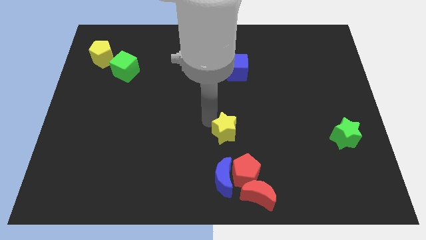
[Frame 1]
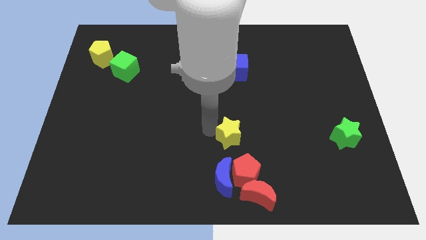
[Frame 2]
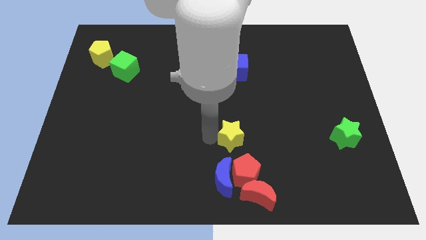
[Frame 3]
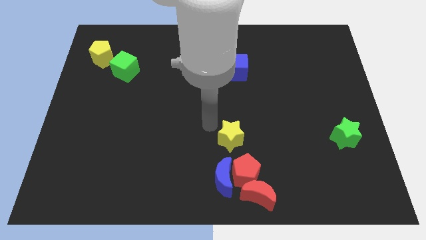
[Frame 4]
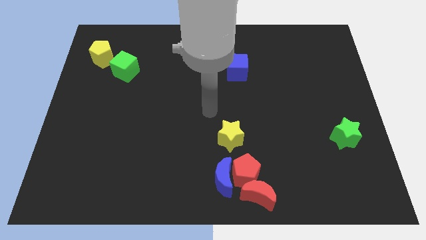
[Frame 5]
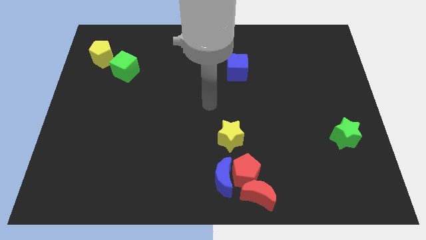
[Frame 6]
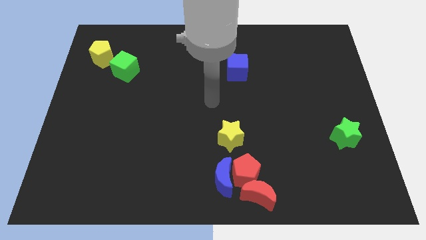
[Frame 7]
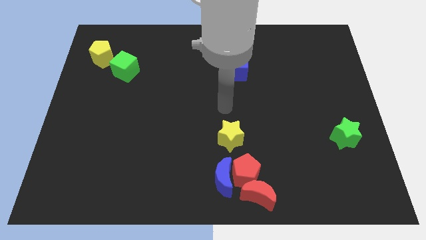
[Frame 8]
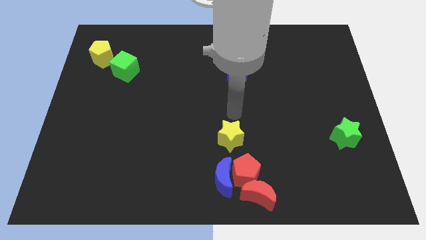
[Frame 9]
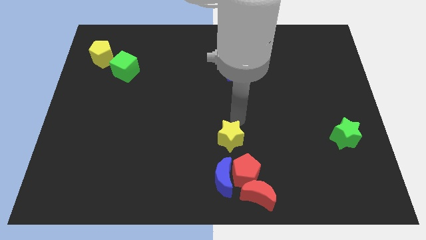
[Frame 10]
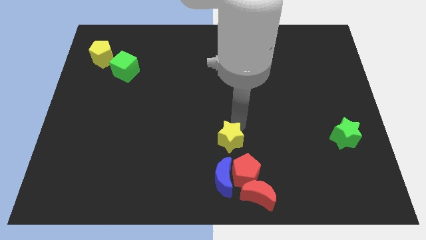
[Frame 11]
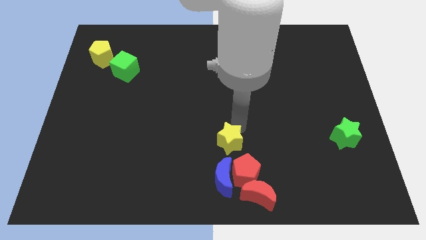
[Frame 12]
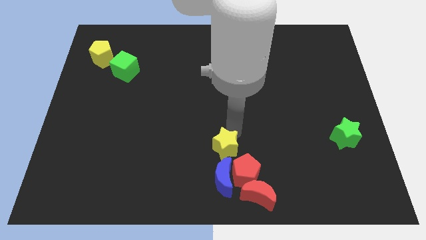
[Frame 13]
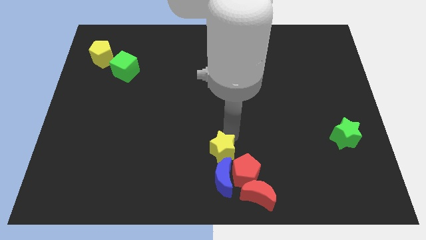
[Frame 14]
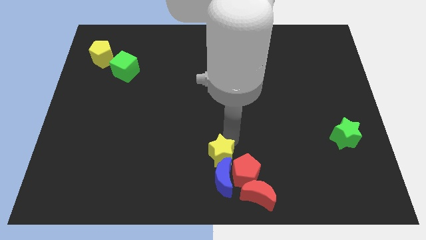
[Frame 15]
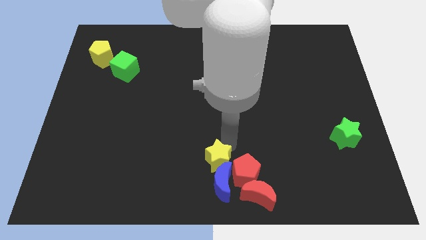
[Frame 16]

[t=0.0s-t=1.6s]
place yellow star to the top of the blue moon

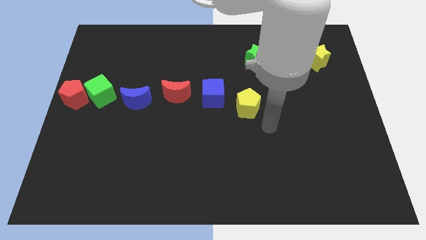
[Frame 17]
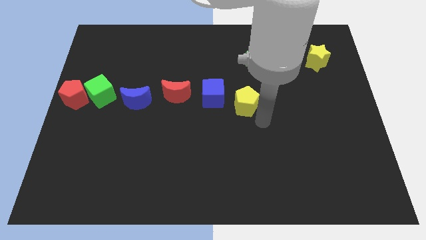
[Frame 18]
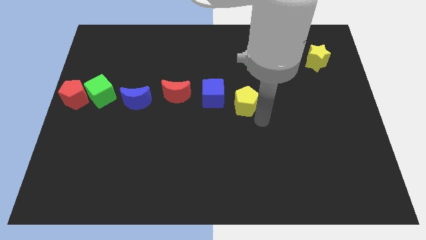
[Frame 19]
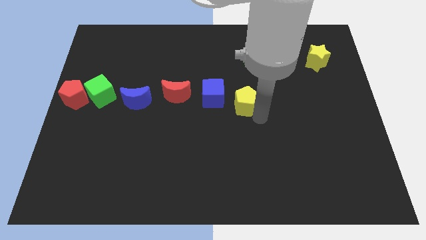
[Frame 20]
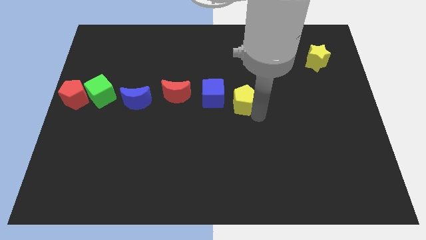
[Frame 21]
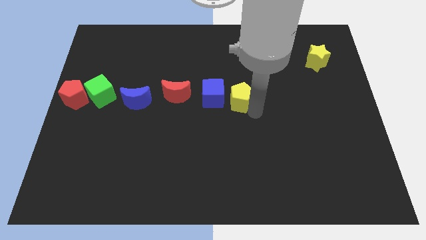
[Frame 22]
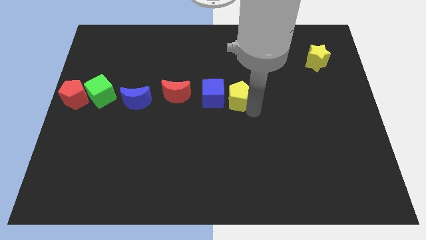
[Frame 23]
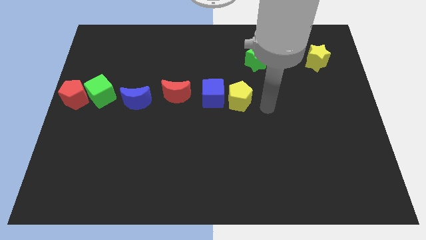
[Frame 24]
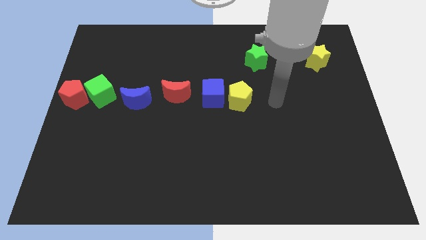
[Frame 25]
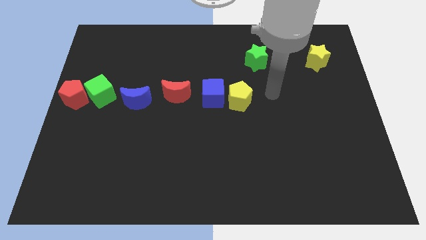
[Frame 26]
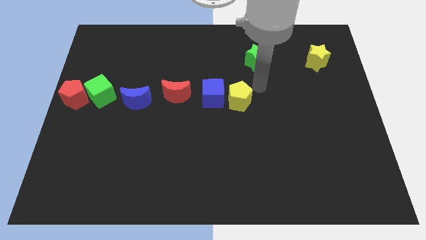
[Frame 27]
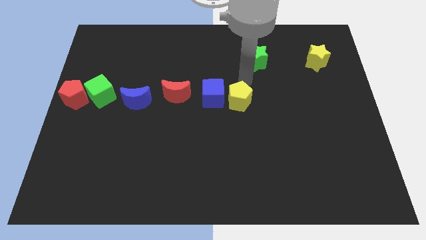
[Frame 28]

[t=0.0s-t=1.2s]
place yellow pentagon beside blue cube

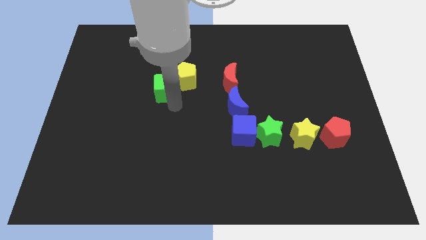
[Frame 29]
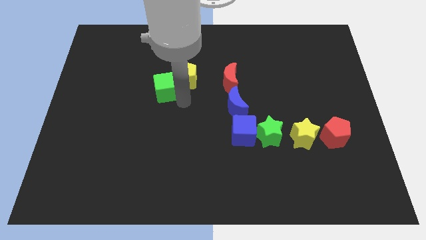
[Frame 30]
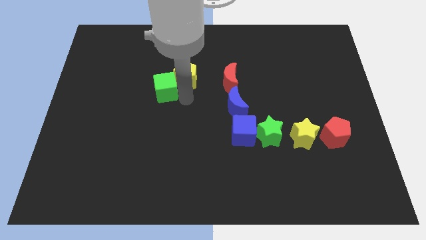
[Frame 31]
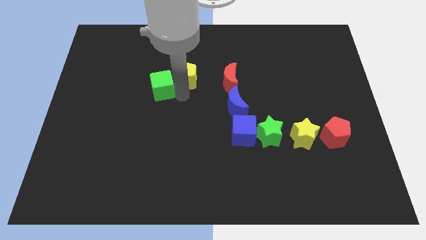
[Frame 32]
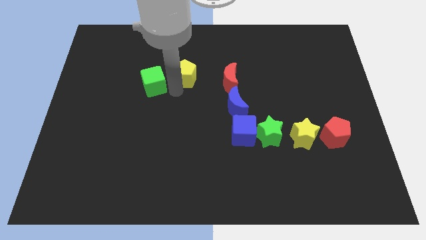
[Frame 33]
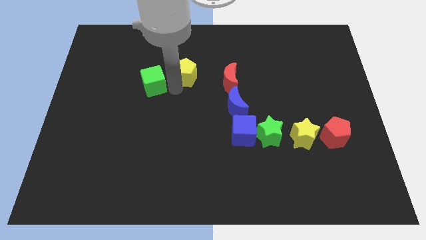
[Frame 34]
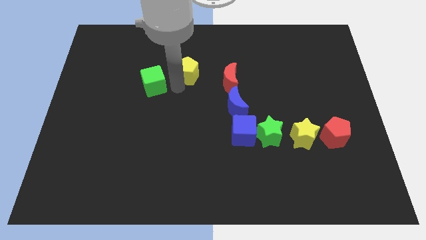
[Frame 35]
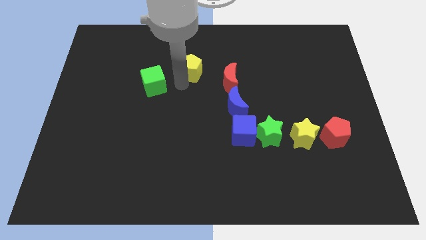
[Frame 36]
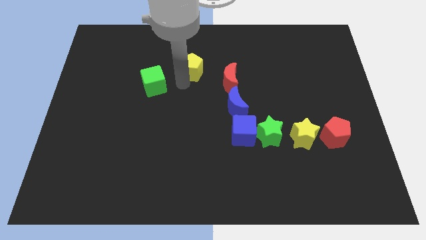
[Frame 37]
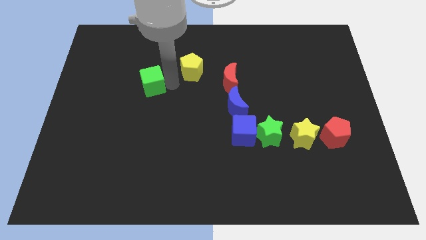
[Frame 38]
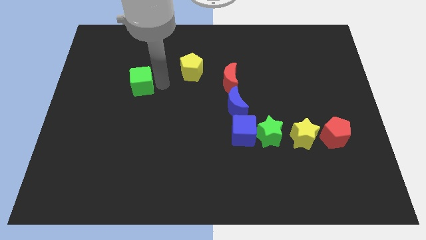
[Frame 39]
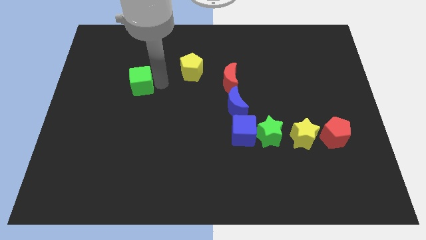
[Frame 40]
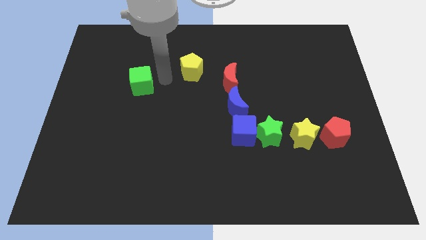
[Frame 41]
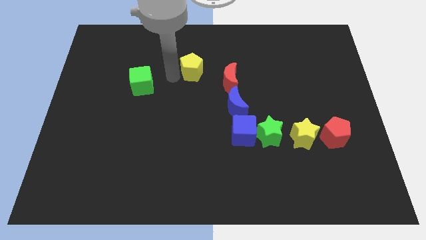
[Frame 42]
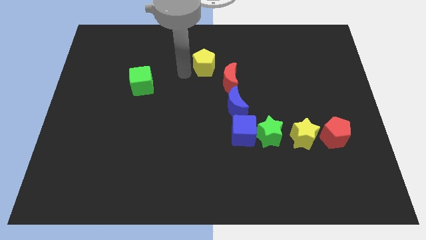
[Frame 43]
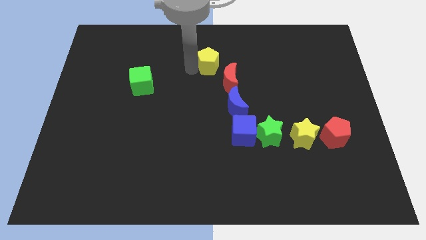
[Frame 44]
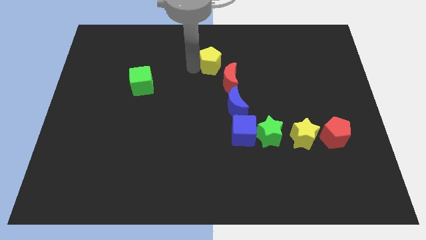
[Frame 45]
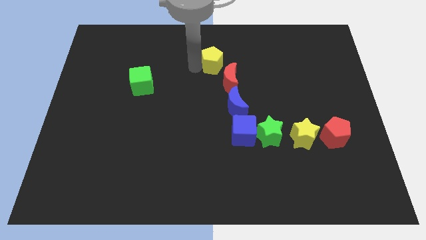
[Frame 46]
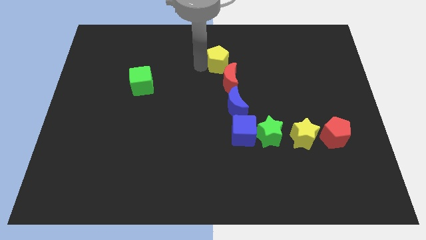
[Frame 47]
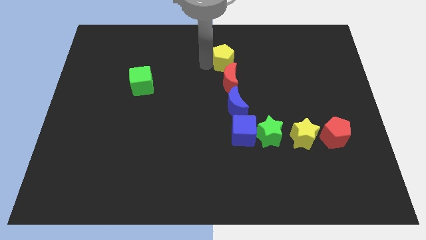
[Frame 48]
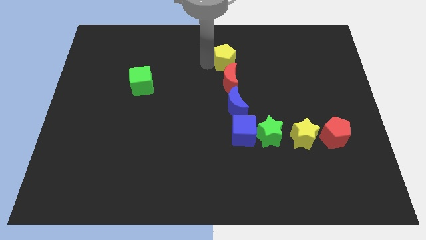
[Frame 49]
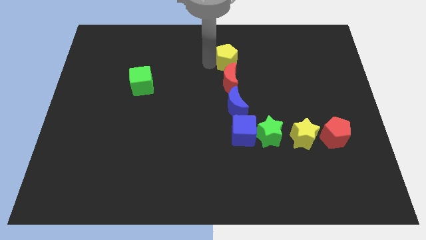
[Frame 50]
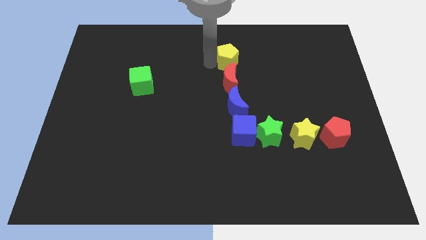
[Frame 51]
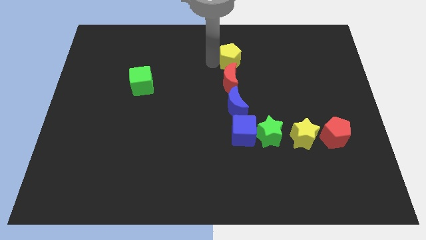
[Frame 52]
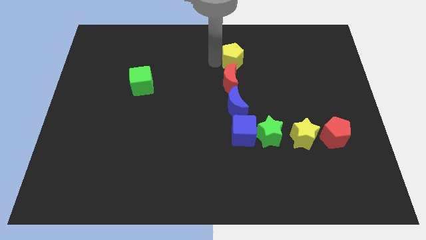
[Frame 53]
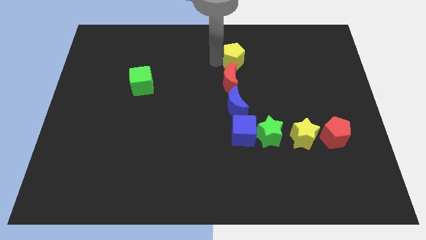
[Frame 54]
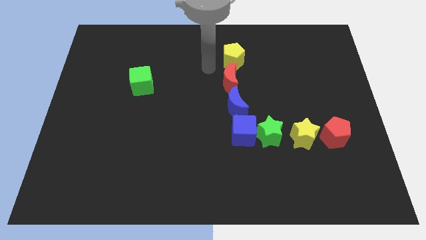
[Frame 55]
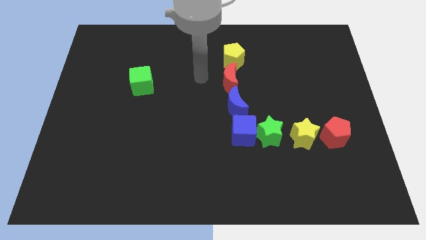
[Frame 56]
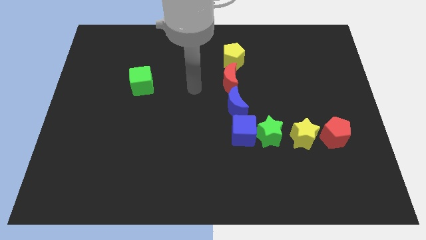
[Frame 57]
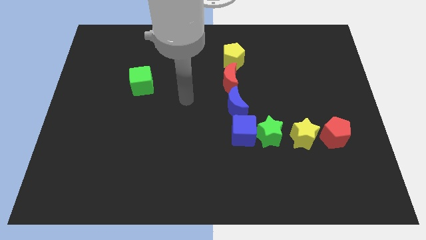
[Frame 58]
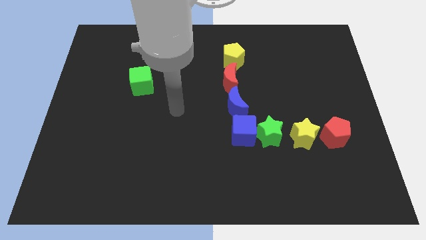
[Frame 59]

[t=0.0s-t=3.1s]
separate the yellow pentagon from green cube to form a vertical line

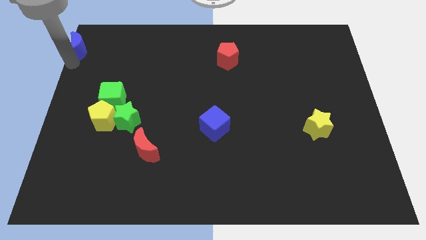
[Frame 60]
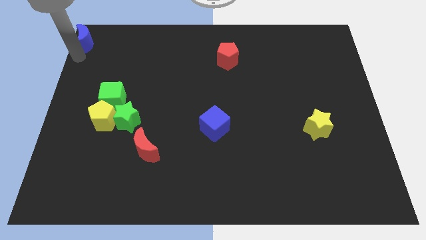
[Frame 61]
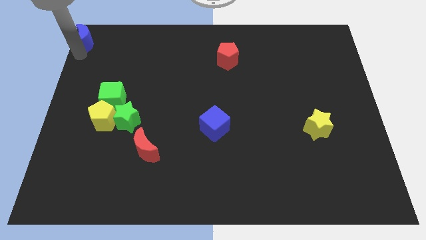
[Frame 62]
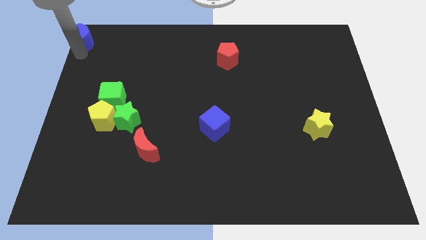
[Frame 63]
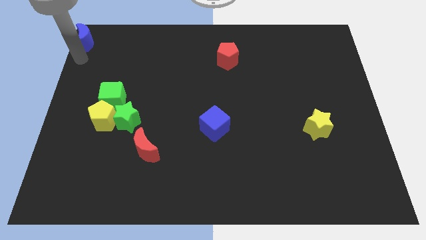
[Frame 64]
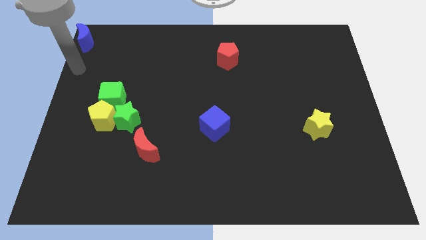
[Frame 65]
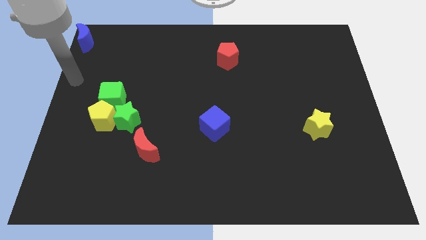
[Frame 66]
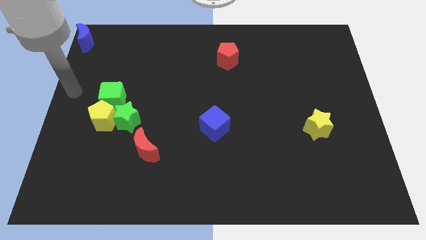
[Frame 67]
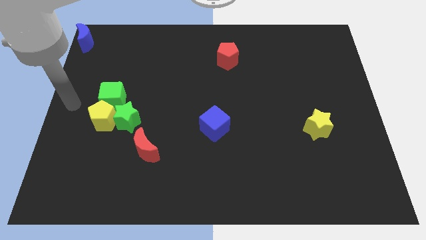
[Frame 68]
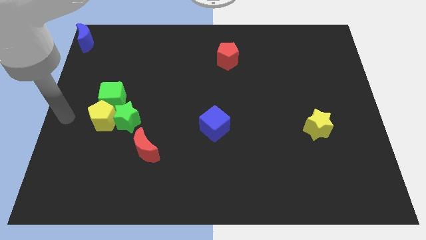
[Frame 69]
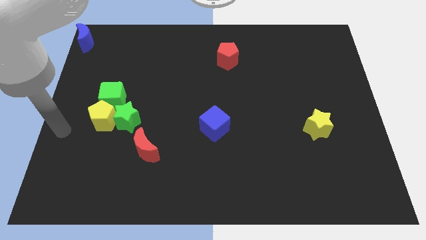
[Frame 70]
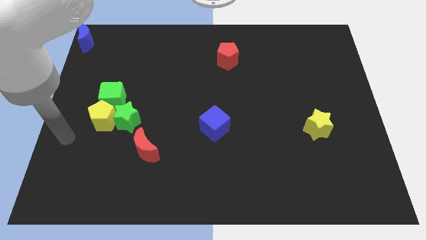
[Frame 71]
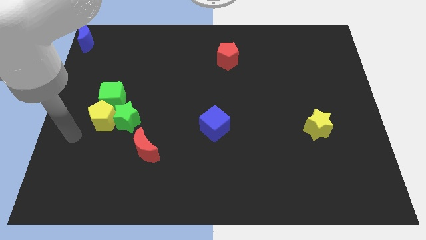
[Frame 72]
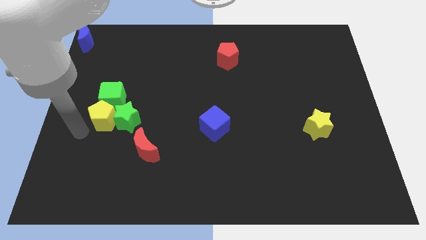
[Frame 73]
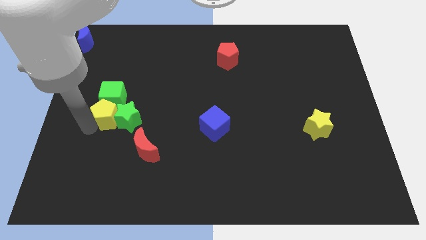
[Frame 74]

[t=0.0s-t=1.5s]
slide the yellow penatgon towards the right

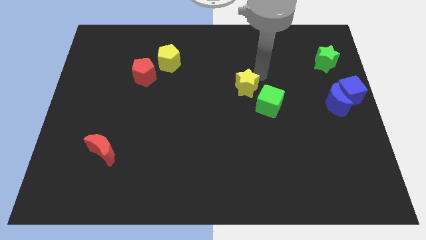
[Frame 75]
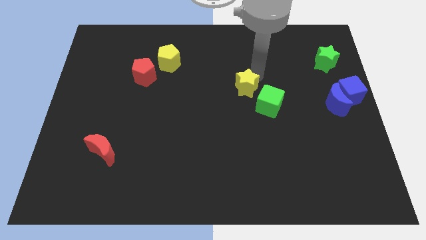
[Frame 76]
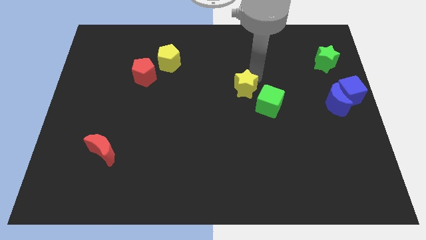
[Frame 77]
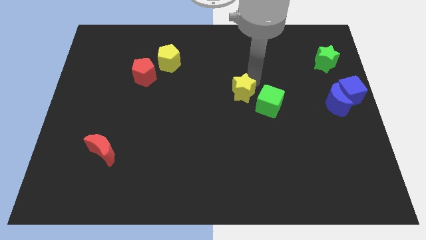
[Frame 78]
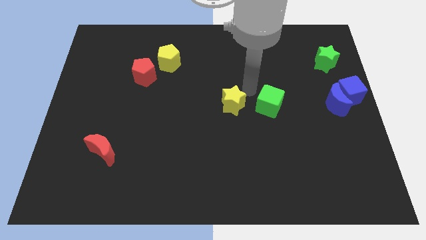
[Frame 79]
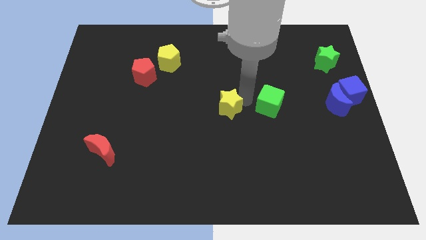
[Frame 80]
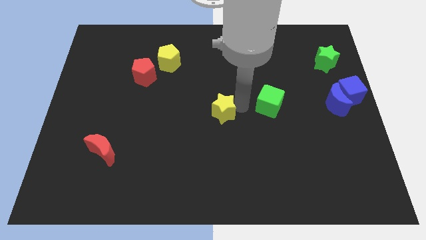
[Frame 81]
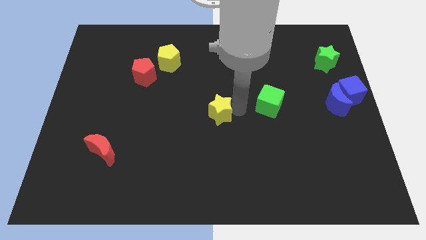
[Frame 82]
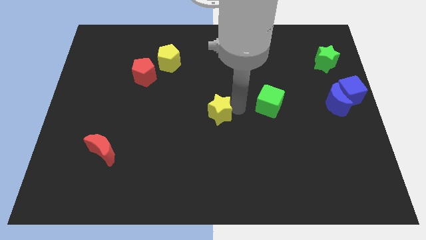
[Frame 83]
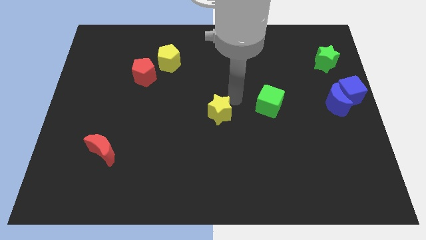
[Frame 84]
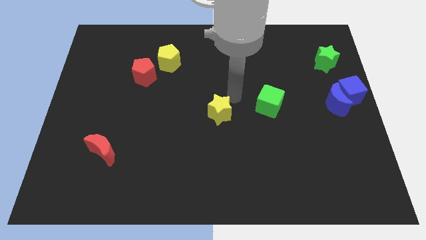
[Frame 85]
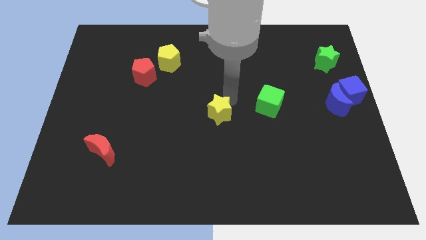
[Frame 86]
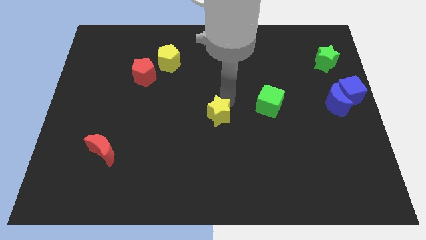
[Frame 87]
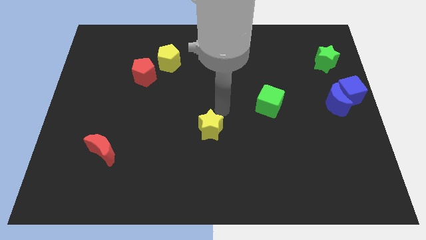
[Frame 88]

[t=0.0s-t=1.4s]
move the yellow star to the center
